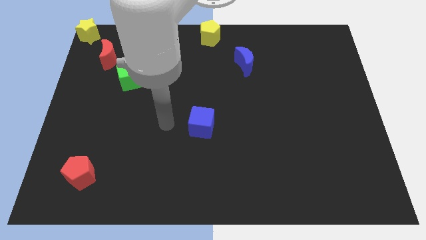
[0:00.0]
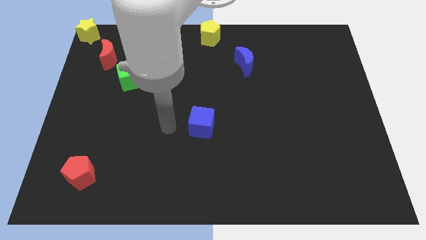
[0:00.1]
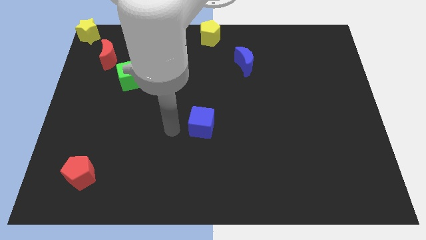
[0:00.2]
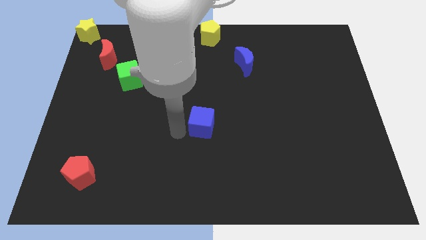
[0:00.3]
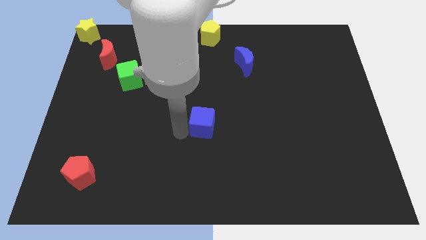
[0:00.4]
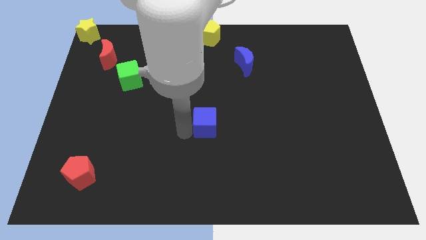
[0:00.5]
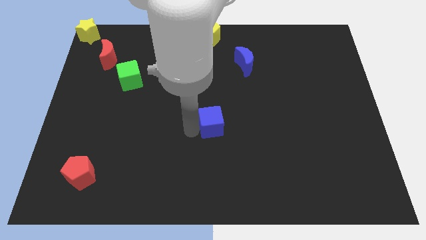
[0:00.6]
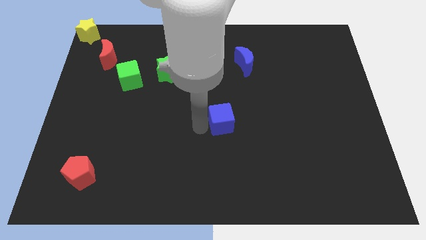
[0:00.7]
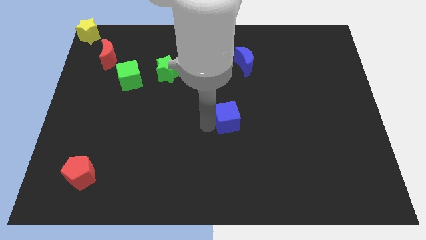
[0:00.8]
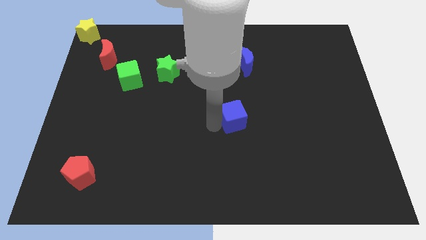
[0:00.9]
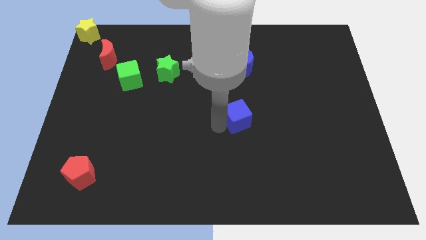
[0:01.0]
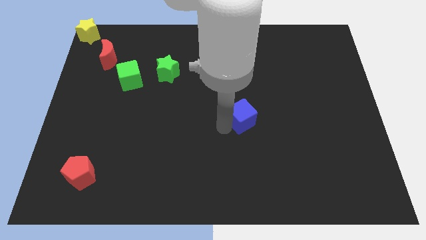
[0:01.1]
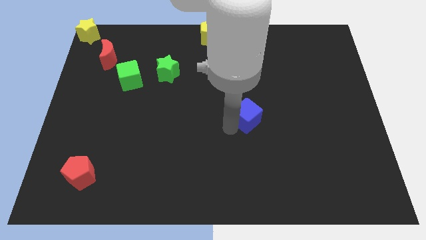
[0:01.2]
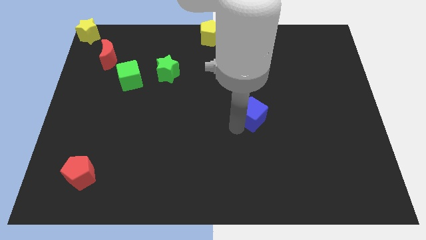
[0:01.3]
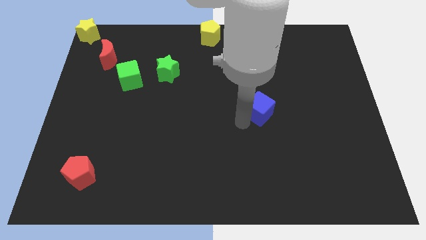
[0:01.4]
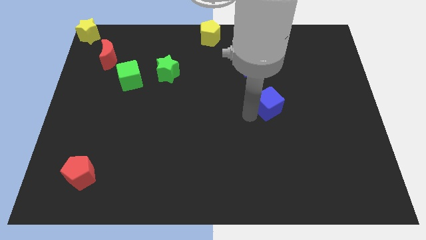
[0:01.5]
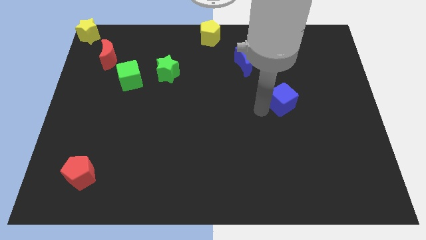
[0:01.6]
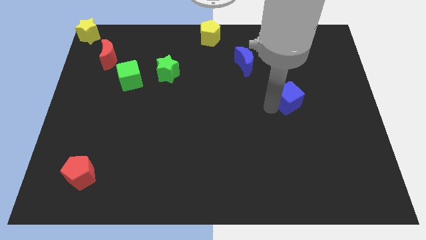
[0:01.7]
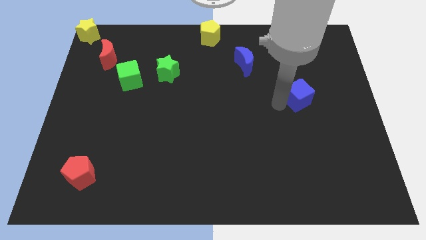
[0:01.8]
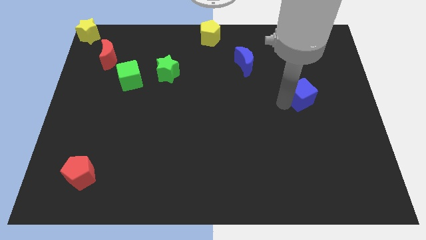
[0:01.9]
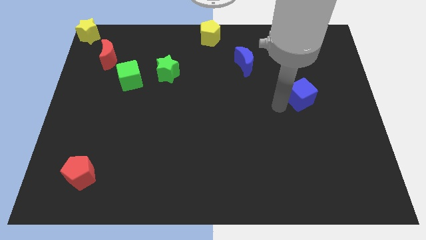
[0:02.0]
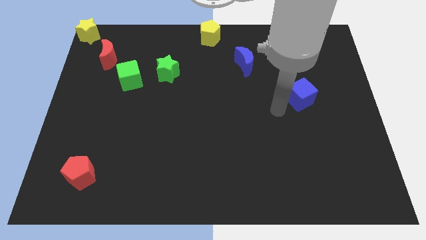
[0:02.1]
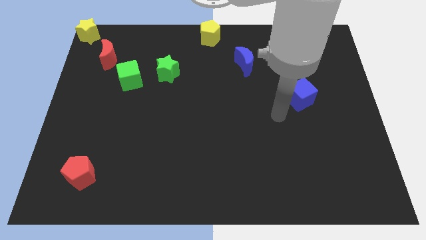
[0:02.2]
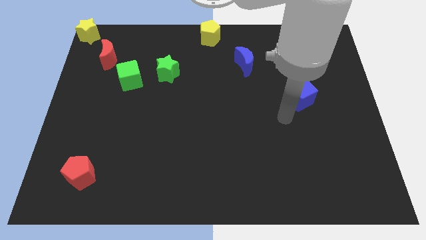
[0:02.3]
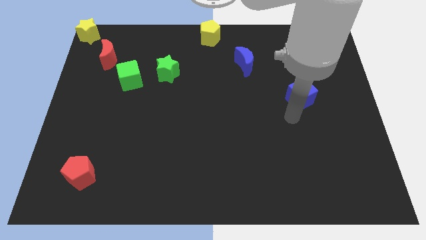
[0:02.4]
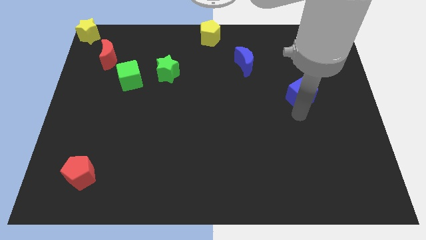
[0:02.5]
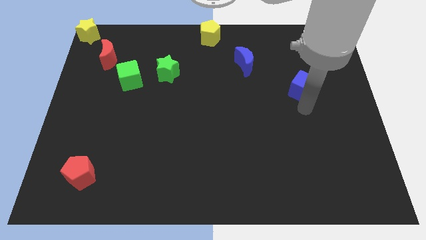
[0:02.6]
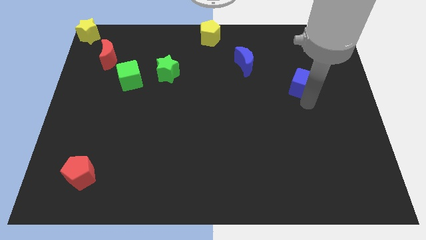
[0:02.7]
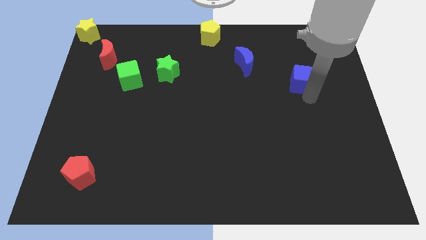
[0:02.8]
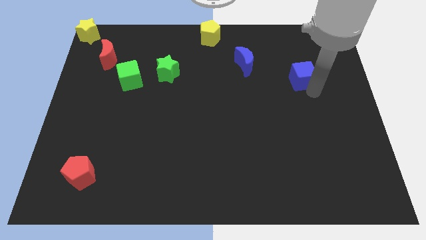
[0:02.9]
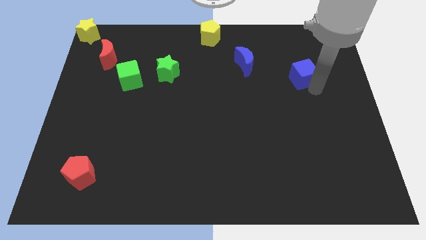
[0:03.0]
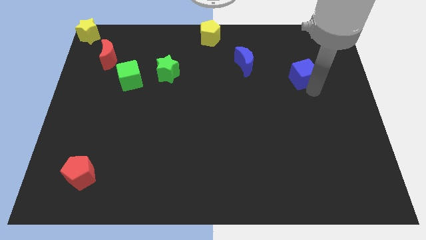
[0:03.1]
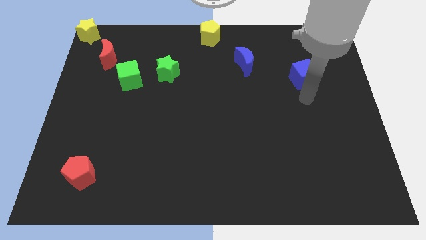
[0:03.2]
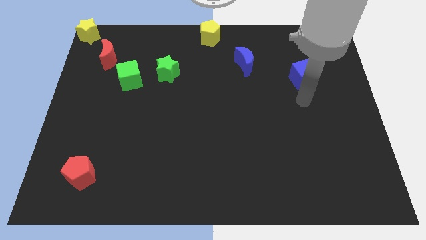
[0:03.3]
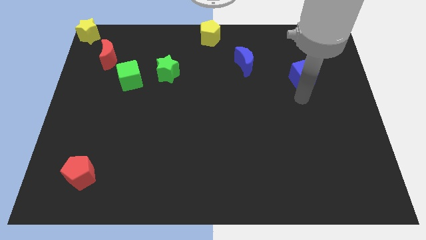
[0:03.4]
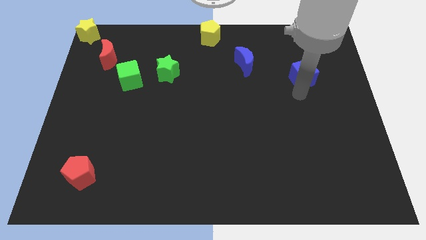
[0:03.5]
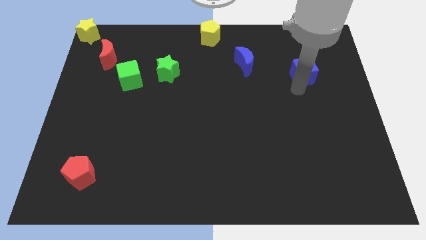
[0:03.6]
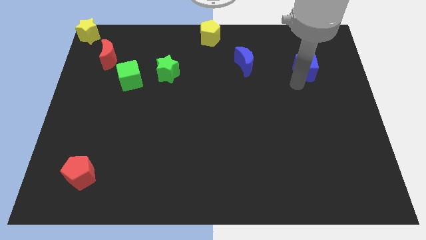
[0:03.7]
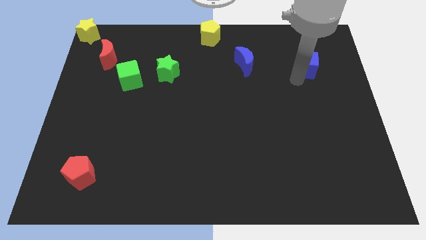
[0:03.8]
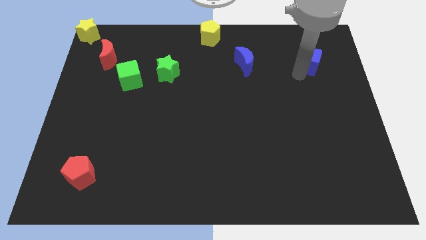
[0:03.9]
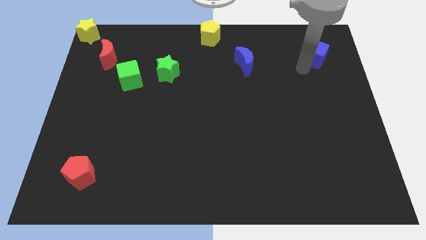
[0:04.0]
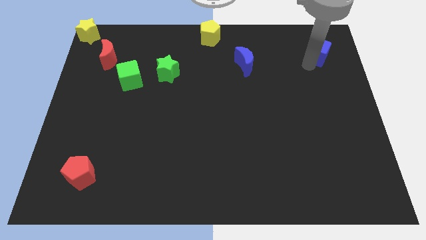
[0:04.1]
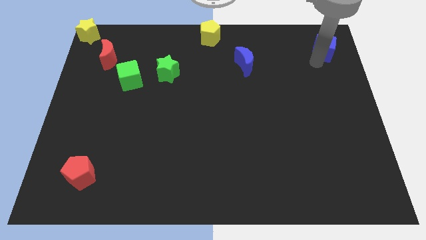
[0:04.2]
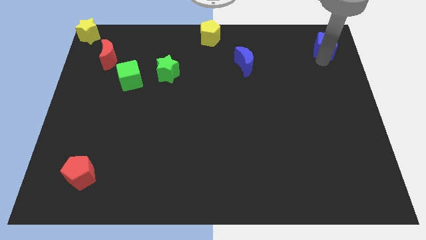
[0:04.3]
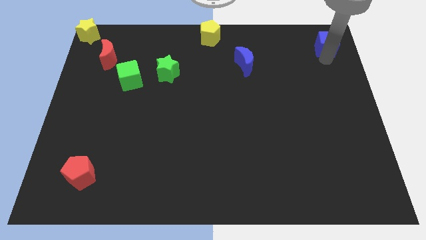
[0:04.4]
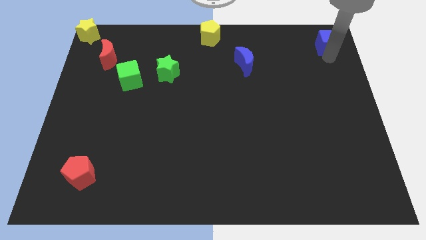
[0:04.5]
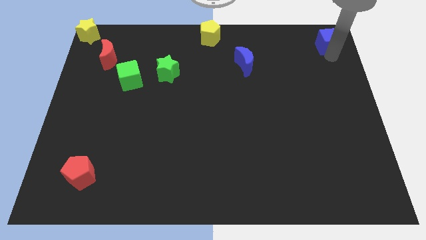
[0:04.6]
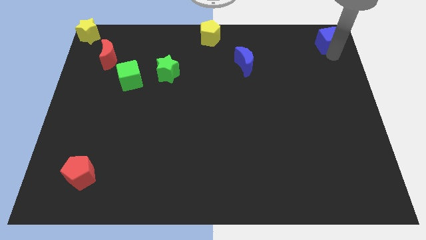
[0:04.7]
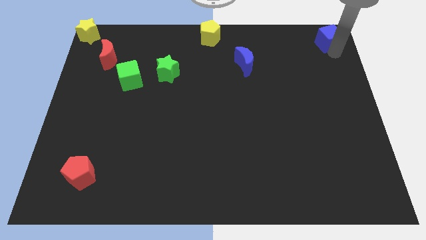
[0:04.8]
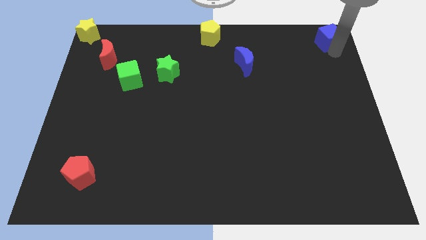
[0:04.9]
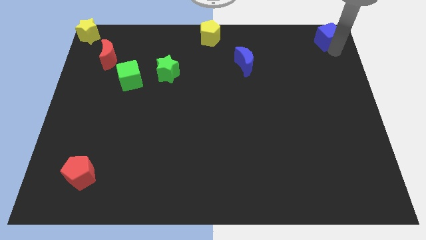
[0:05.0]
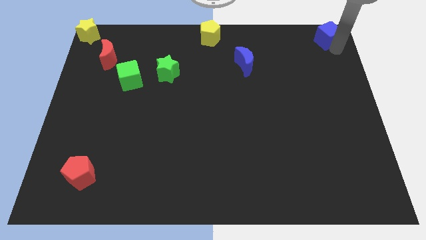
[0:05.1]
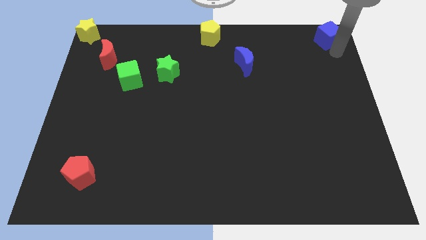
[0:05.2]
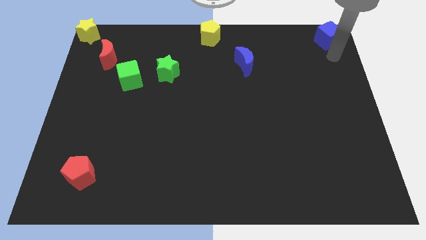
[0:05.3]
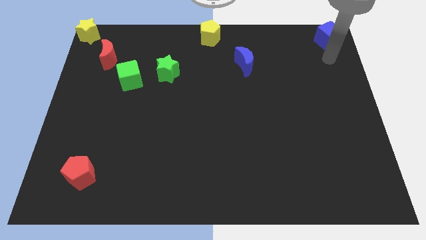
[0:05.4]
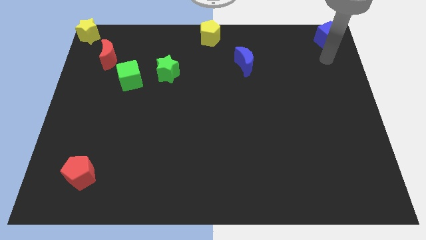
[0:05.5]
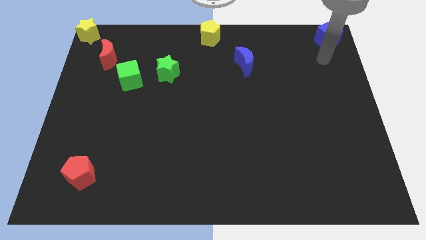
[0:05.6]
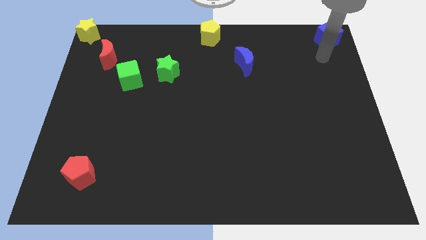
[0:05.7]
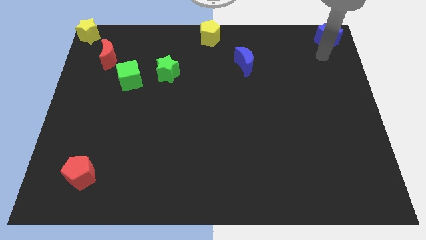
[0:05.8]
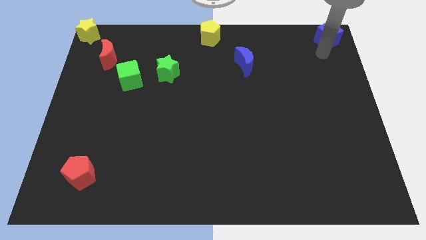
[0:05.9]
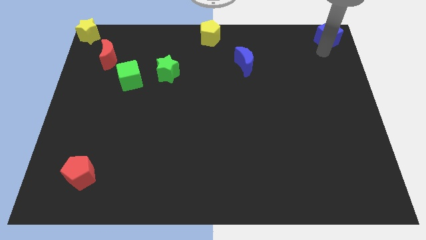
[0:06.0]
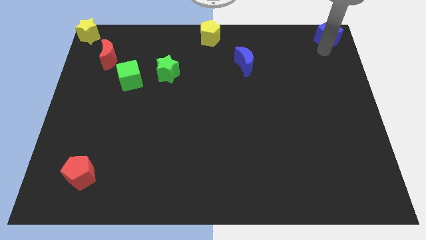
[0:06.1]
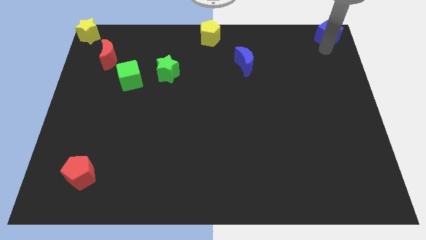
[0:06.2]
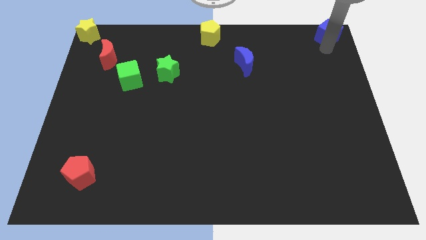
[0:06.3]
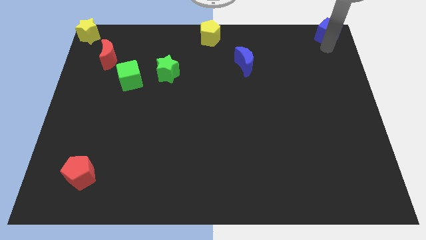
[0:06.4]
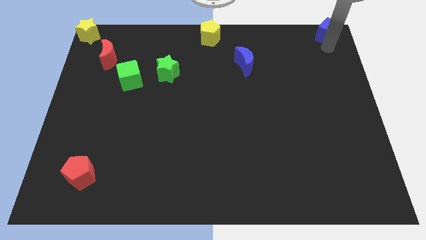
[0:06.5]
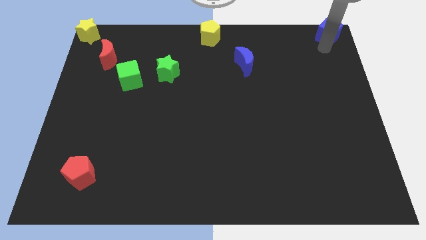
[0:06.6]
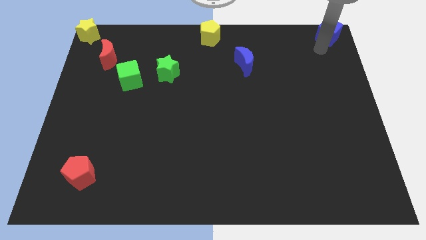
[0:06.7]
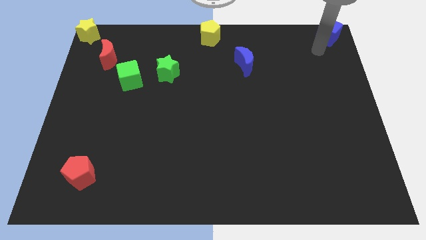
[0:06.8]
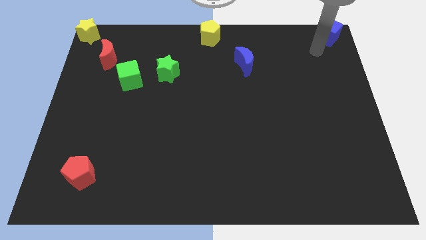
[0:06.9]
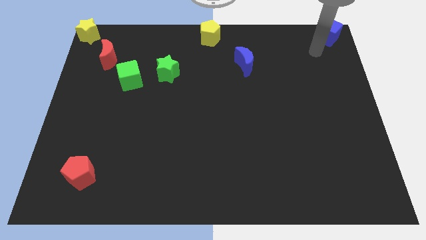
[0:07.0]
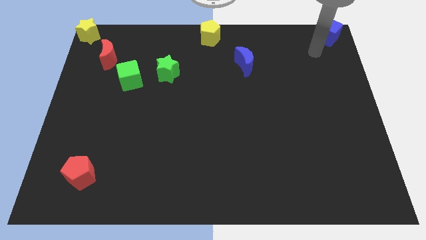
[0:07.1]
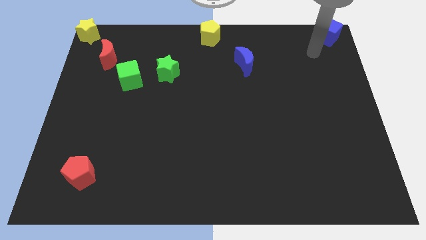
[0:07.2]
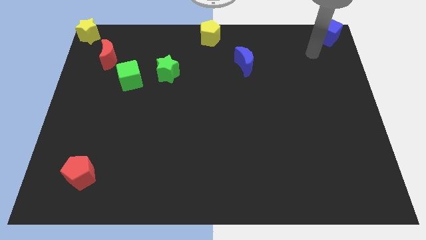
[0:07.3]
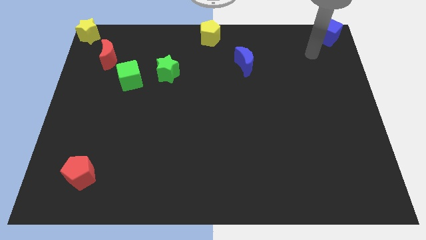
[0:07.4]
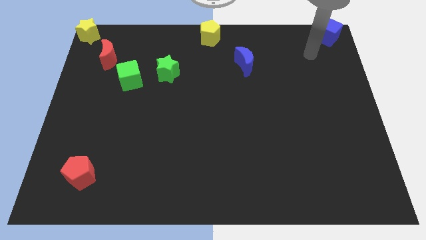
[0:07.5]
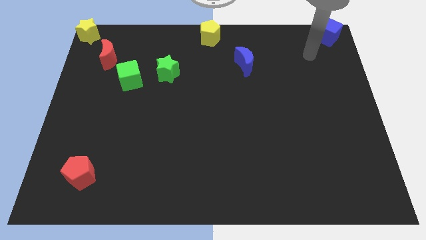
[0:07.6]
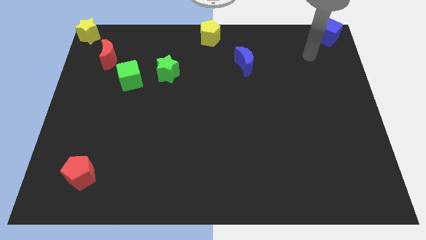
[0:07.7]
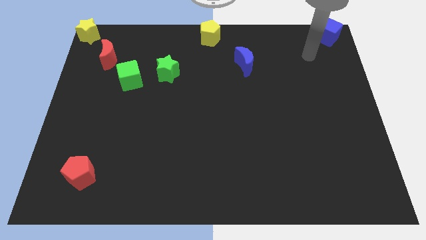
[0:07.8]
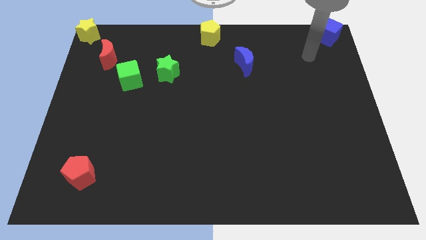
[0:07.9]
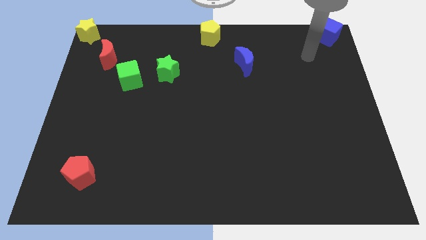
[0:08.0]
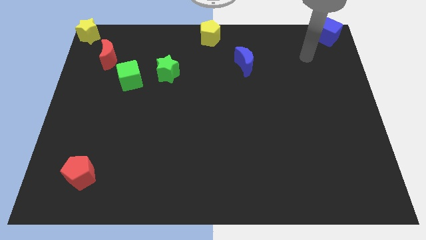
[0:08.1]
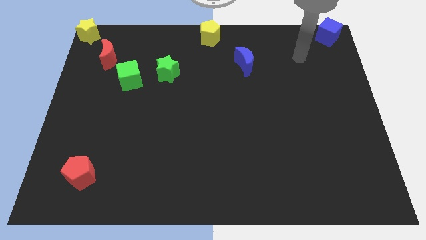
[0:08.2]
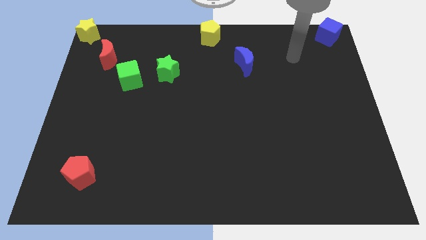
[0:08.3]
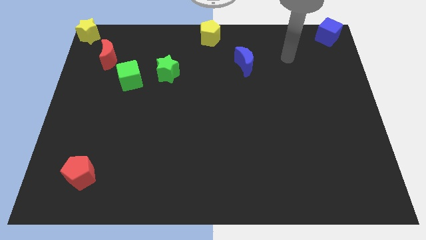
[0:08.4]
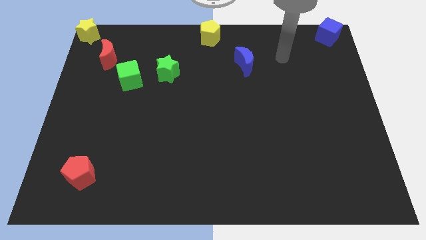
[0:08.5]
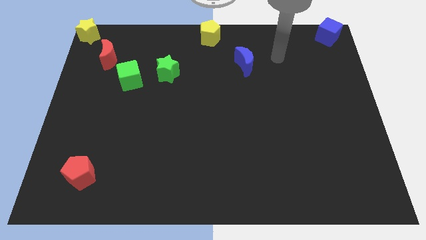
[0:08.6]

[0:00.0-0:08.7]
move the blue cube to the top right corner

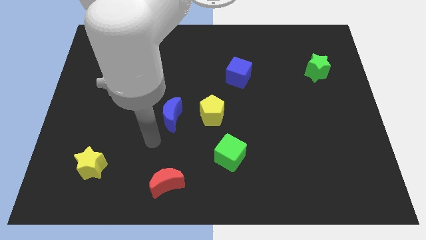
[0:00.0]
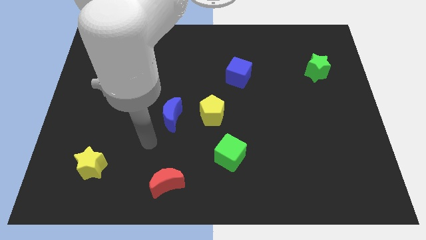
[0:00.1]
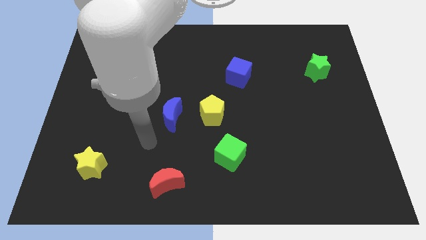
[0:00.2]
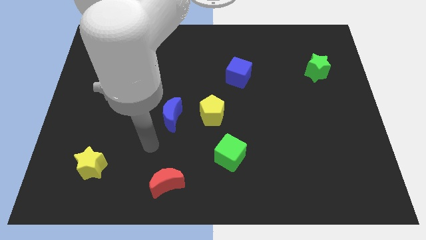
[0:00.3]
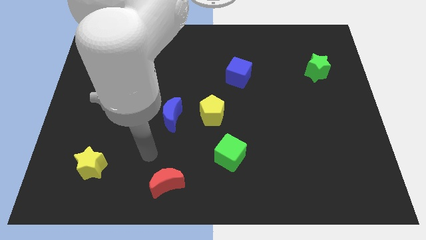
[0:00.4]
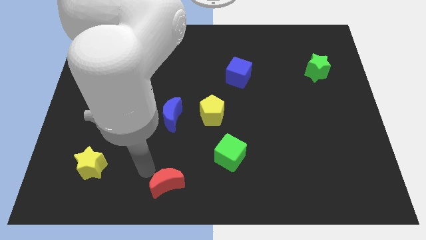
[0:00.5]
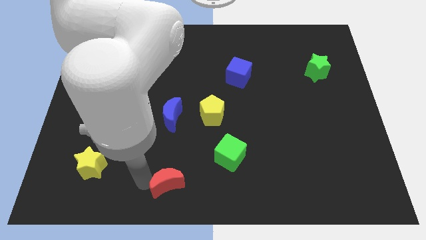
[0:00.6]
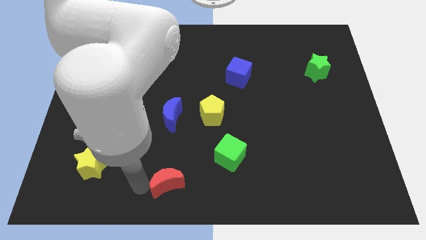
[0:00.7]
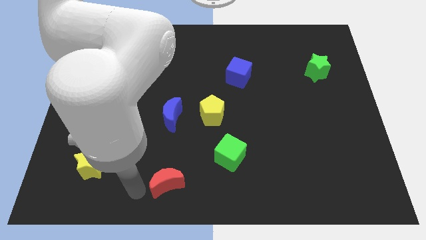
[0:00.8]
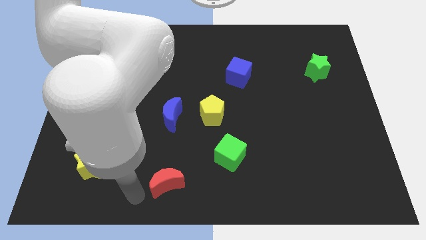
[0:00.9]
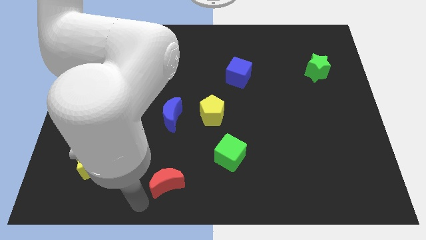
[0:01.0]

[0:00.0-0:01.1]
move your arm towards the red crescent
